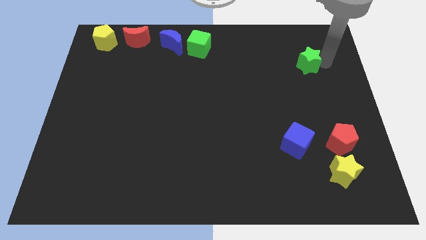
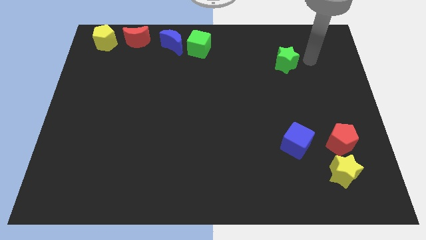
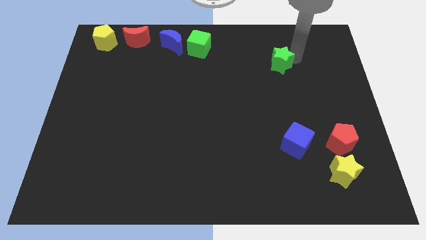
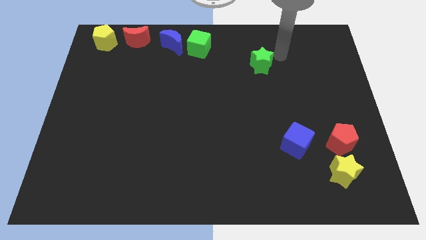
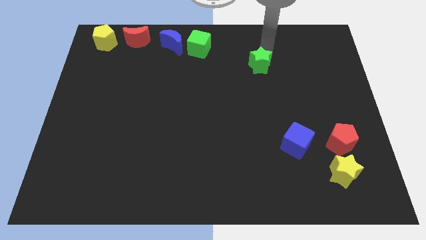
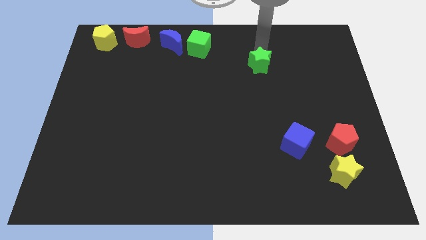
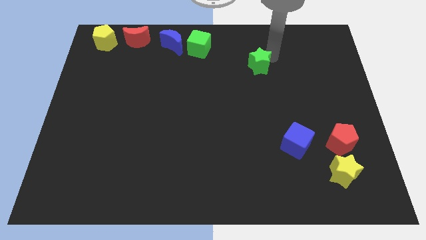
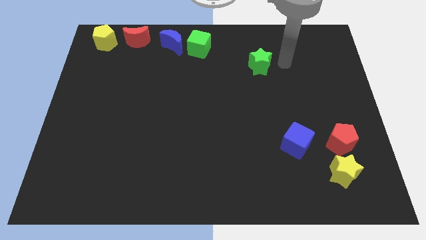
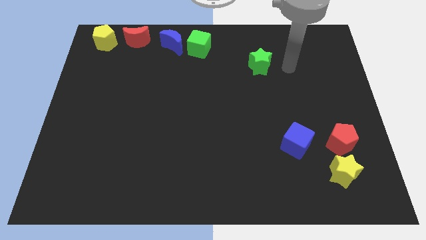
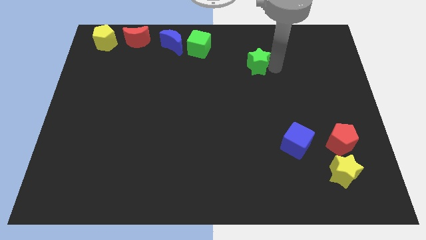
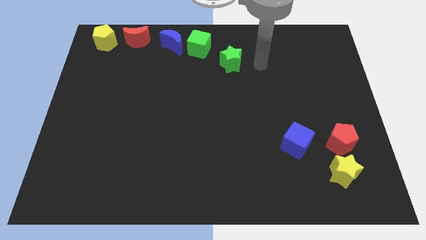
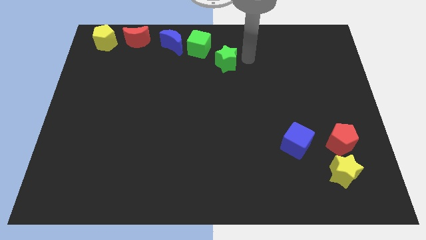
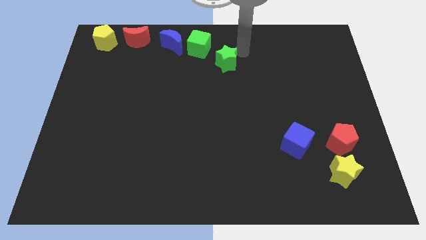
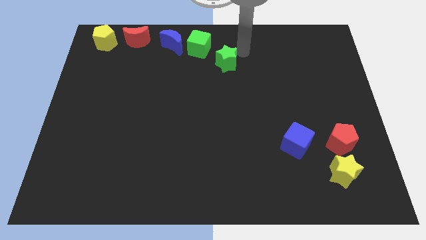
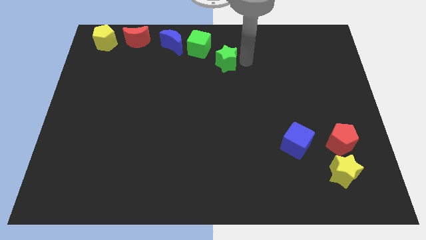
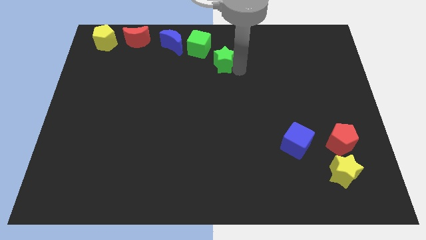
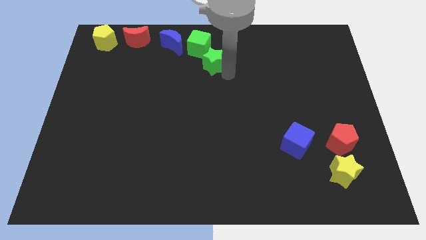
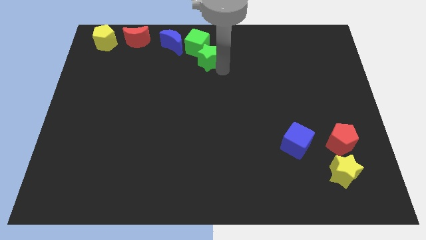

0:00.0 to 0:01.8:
push the green star into the green cube

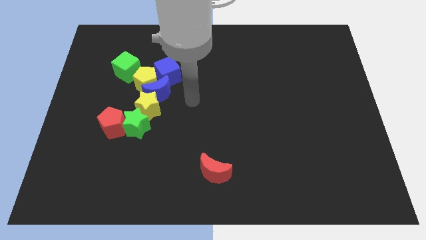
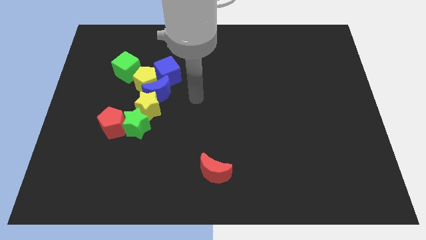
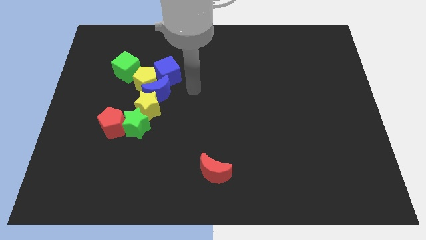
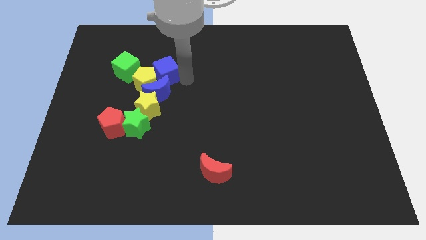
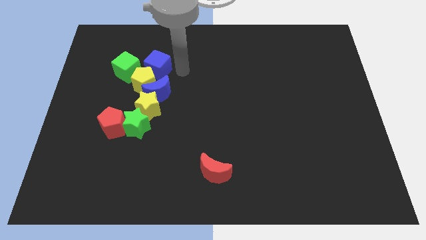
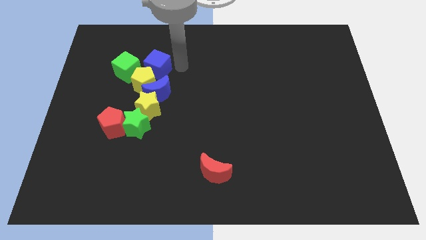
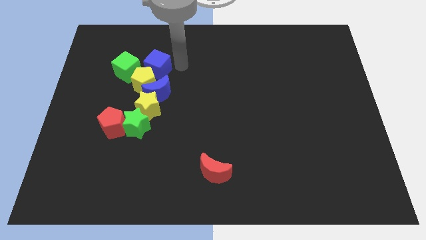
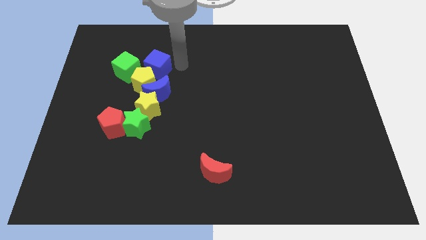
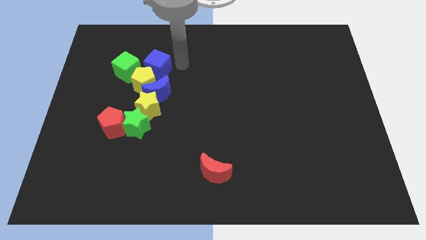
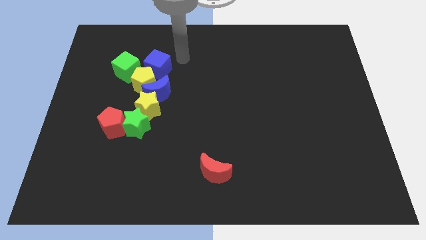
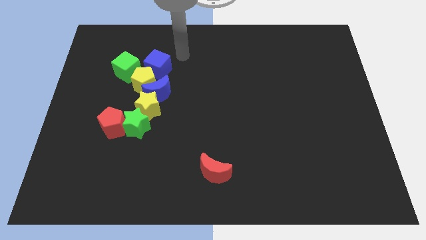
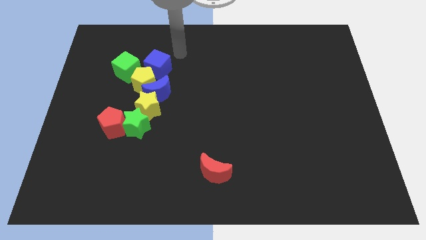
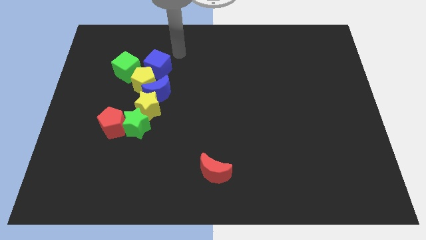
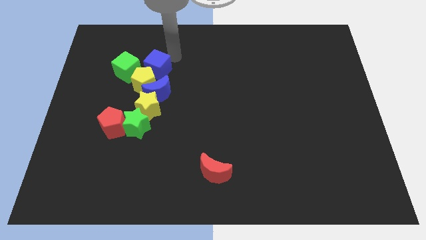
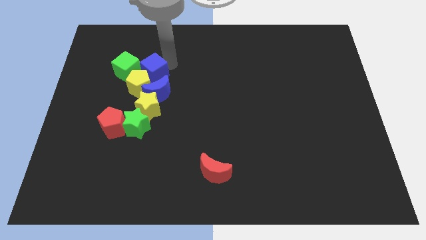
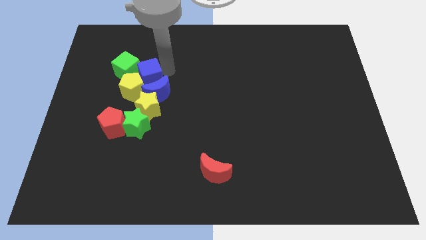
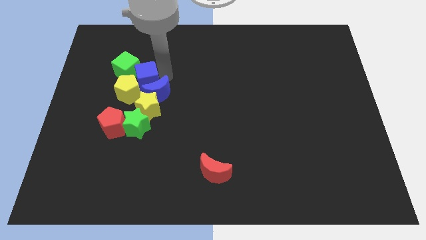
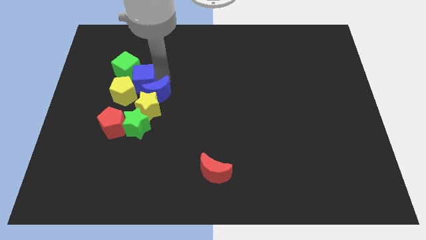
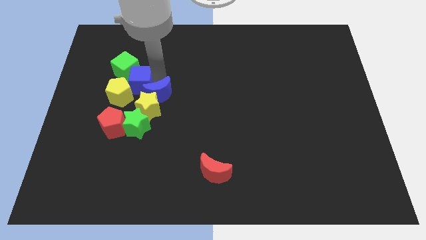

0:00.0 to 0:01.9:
push the blue cube to the bottom right to the blue cube

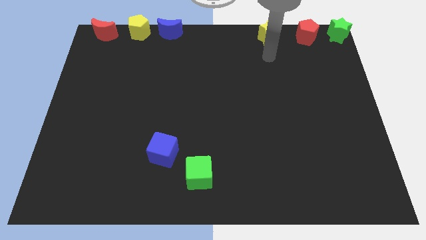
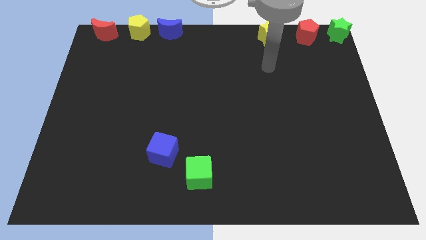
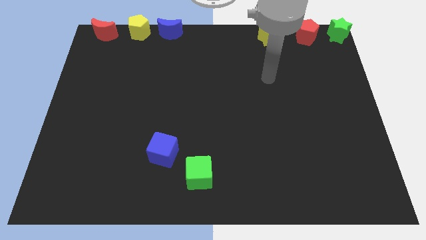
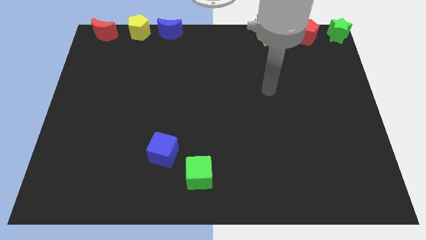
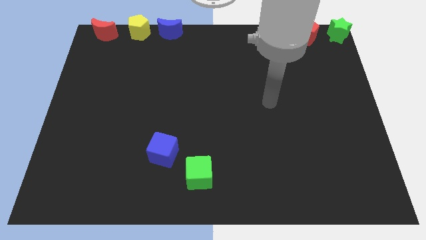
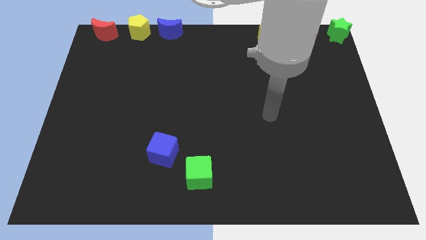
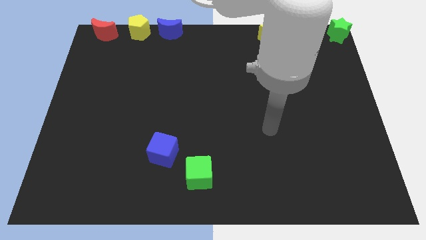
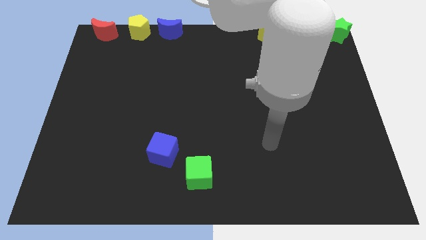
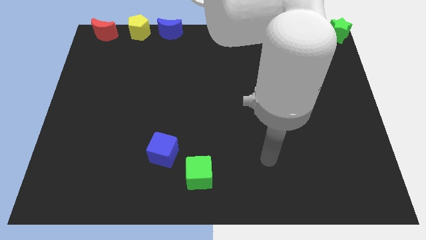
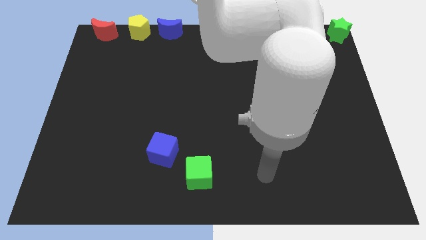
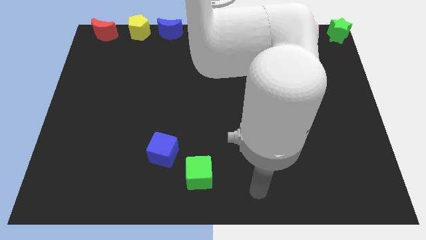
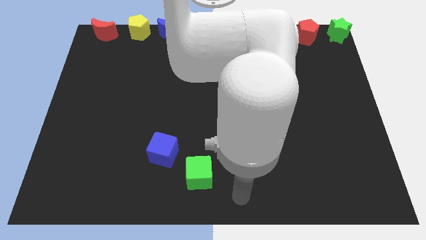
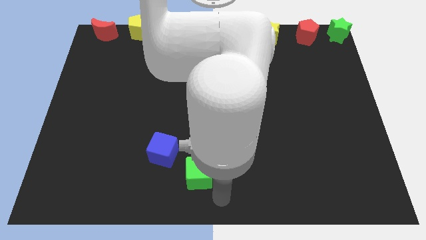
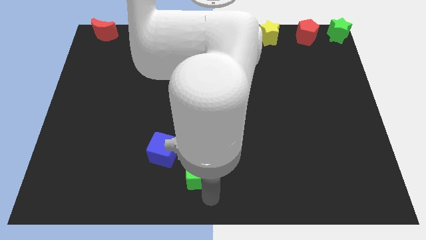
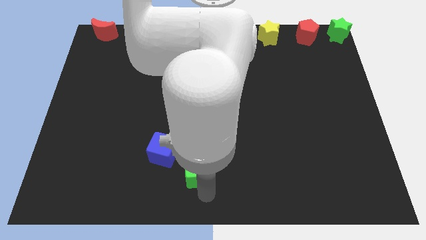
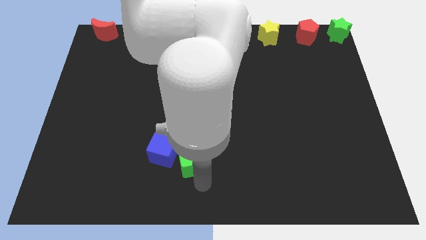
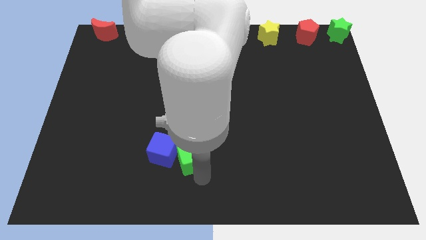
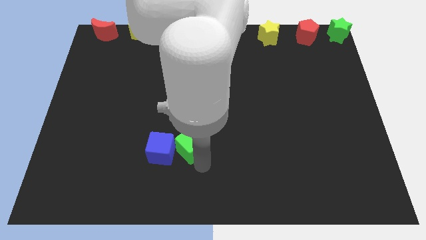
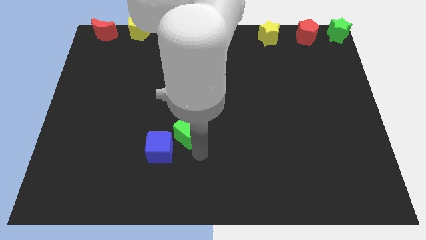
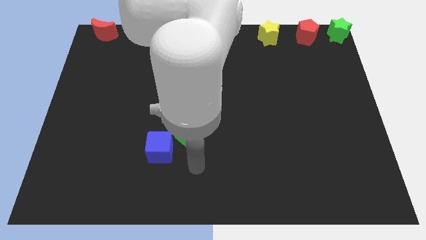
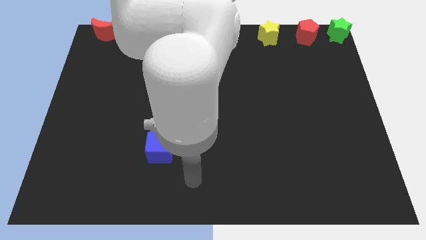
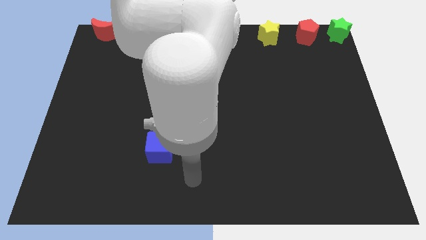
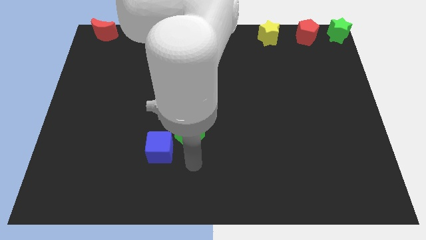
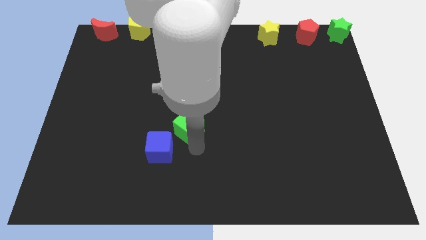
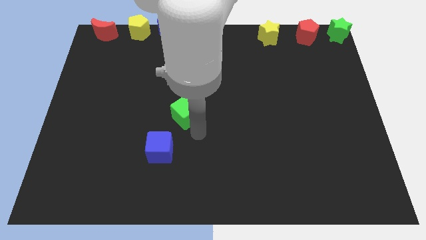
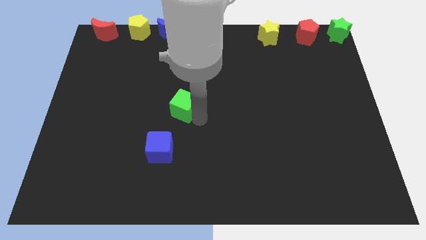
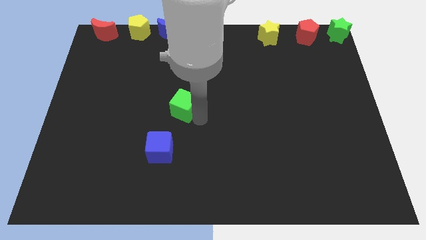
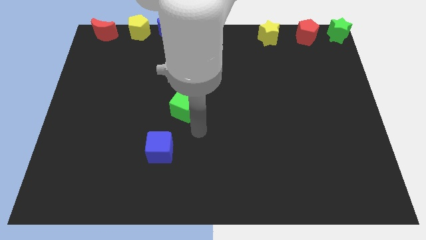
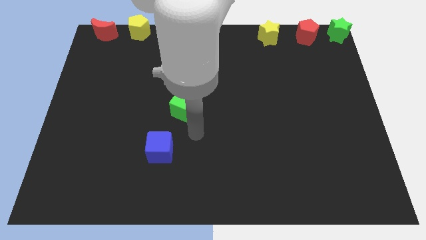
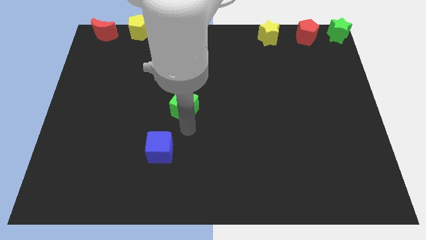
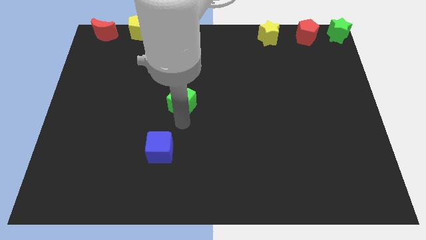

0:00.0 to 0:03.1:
drag the green cube to the top right side of the blue cube

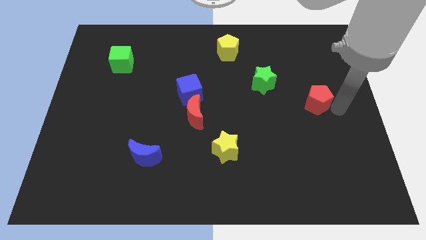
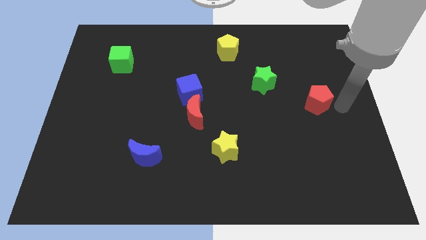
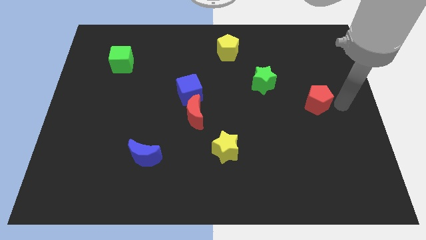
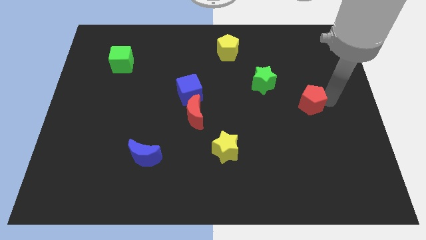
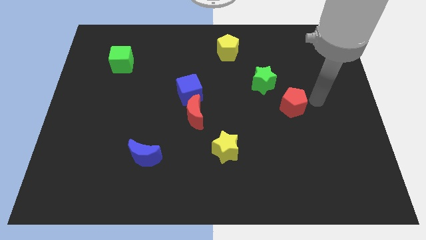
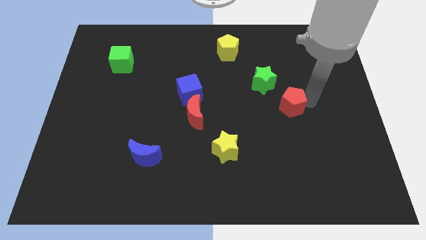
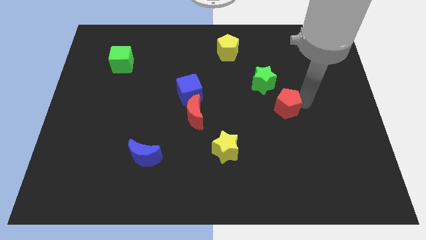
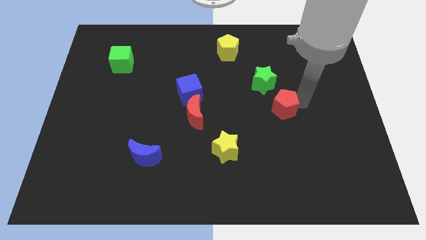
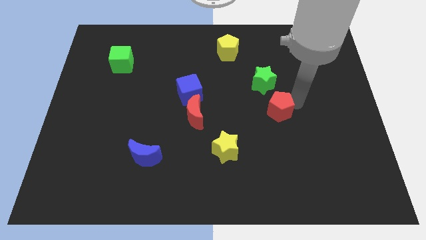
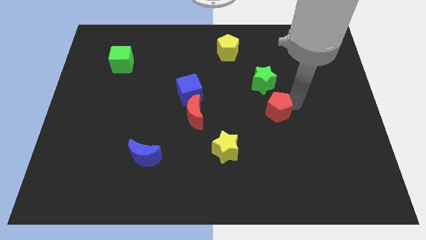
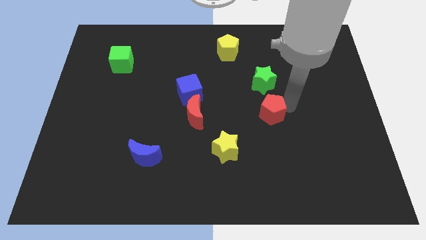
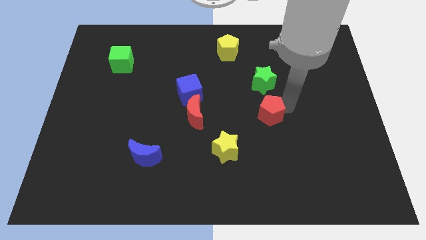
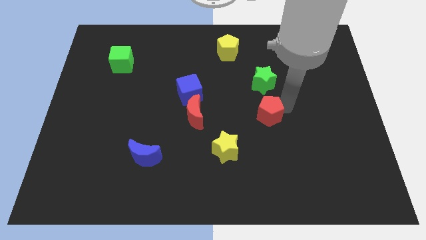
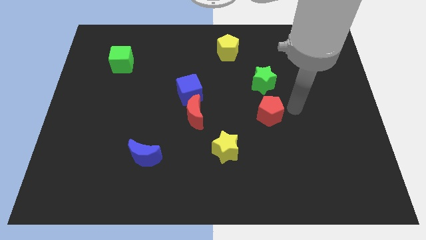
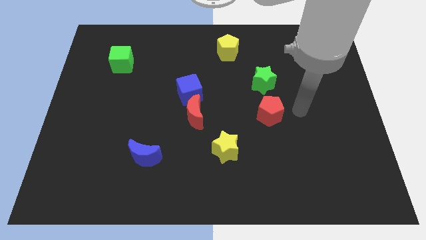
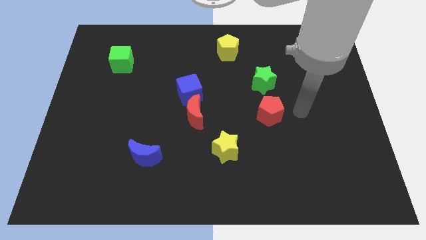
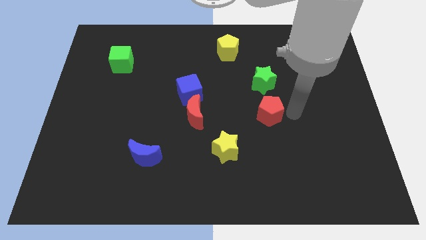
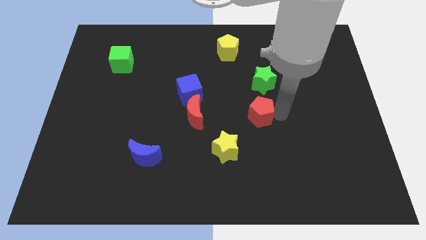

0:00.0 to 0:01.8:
move red pentagon to the bottom of green star

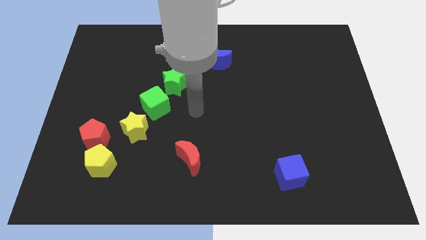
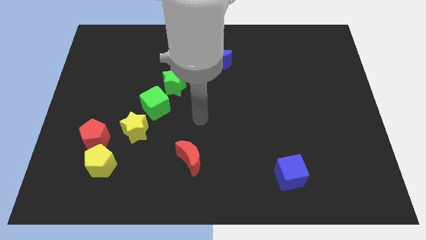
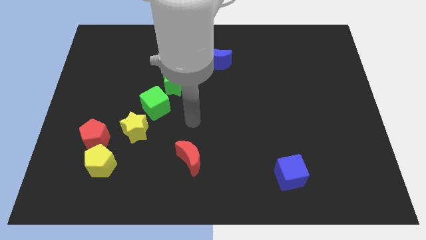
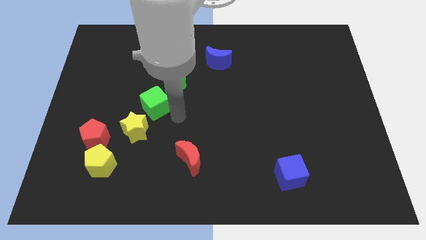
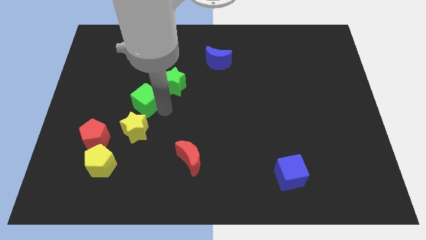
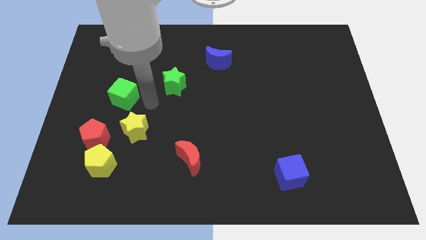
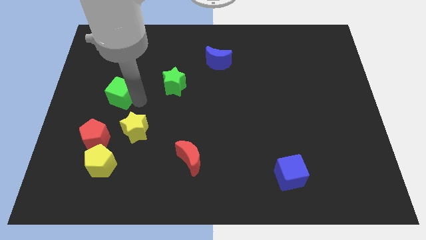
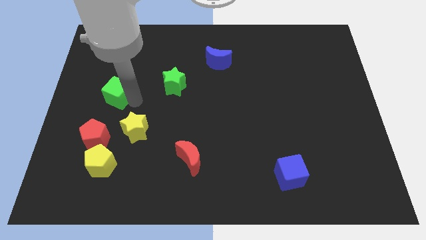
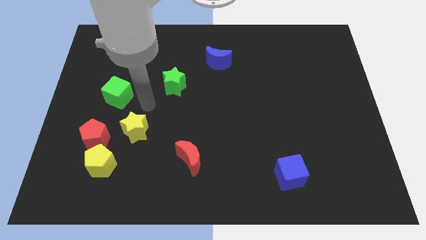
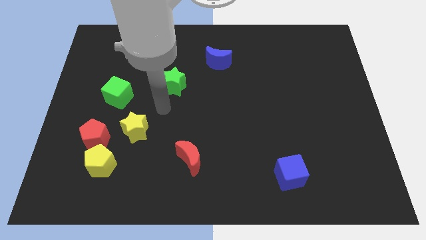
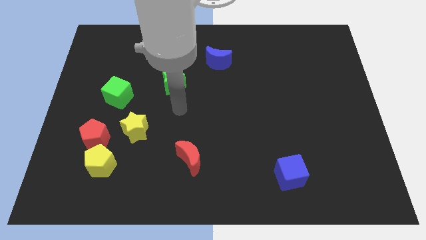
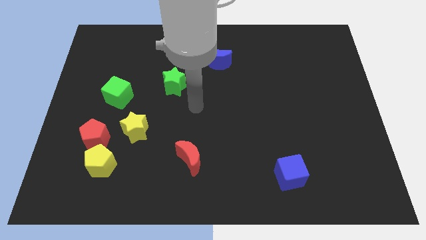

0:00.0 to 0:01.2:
push the green cube to the top left side of the yellow star
